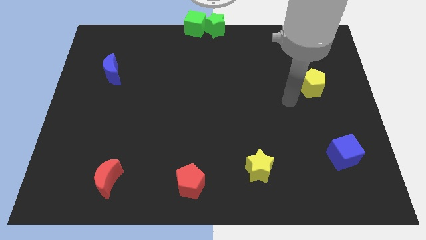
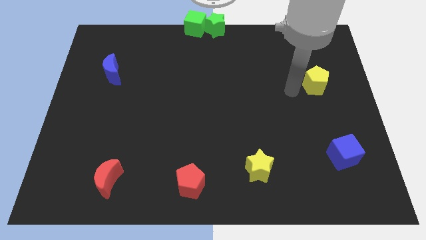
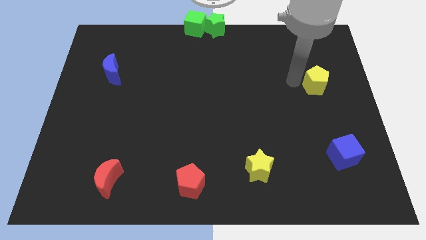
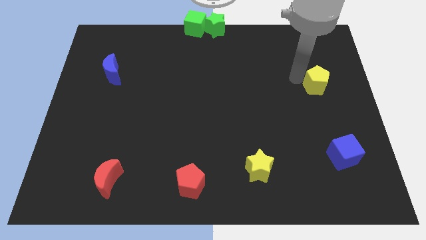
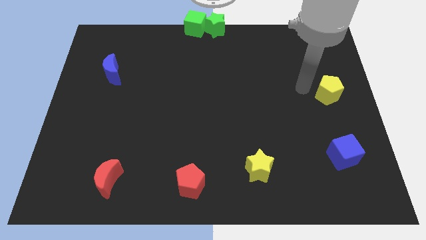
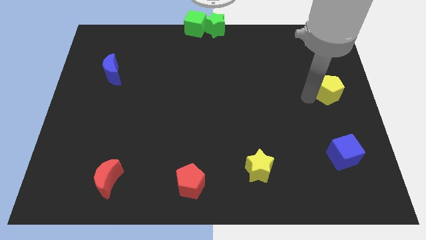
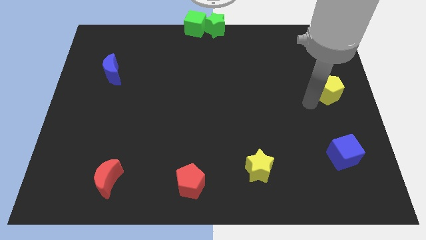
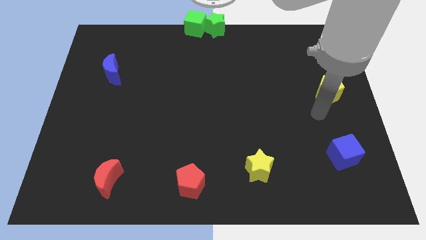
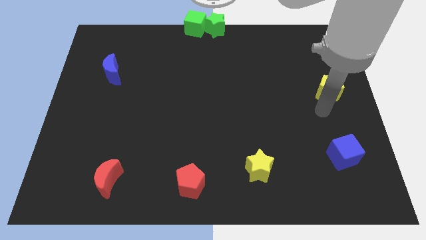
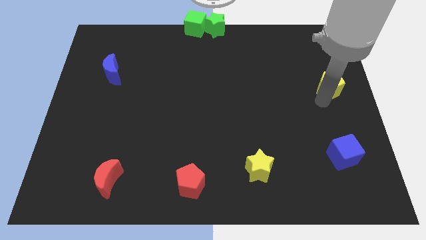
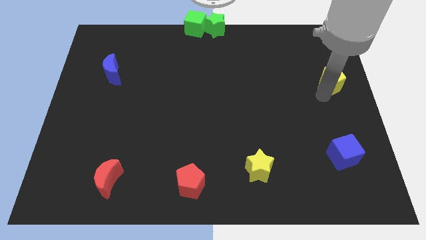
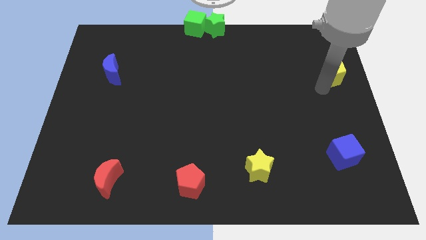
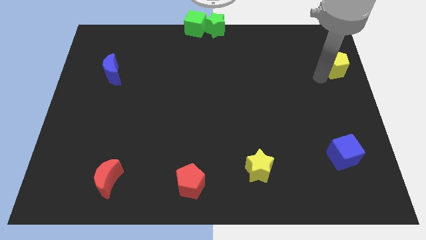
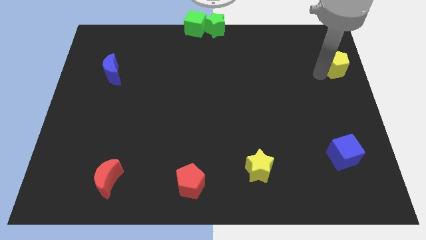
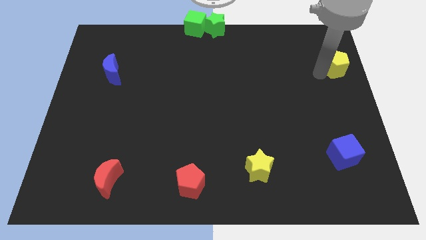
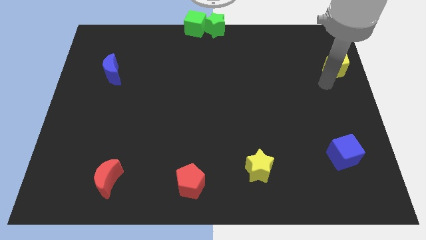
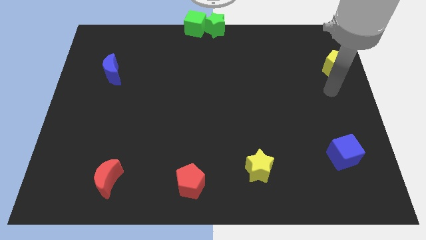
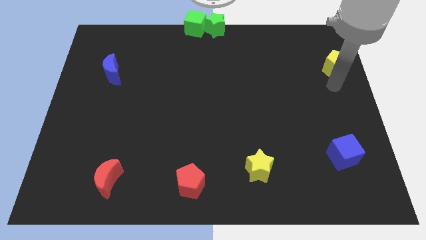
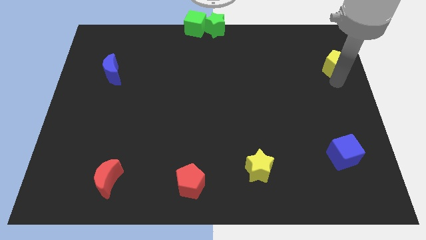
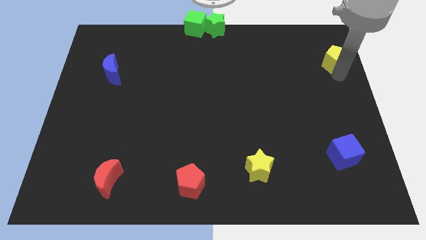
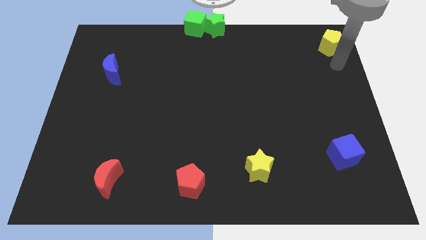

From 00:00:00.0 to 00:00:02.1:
push the yellow pentagon towards the top right side of the board

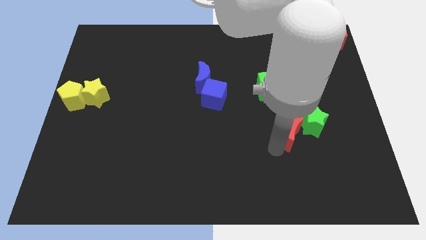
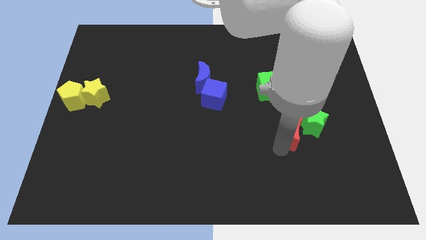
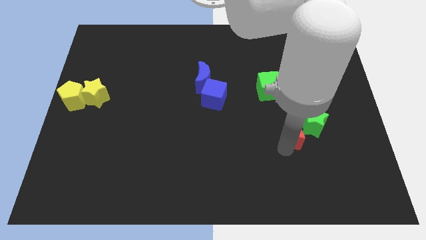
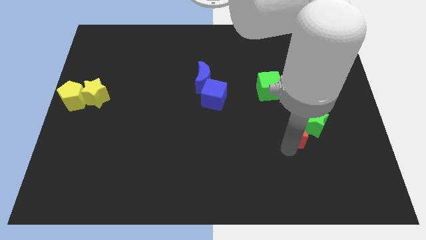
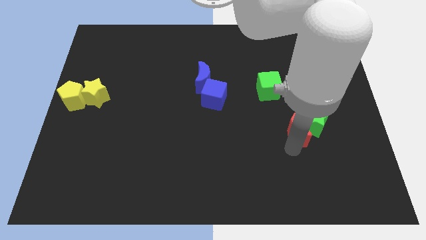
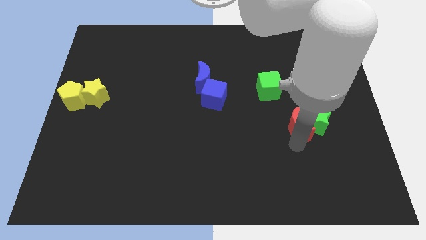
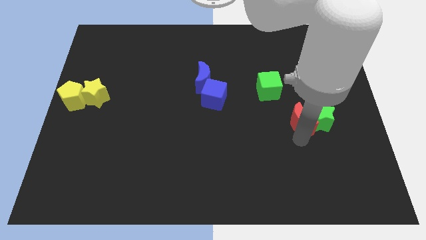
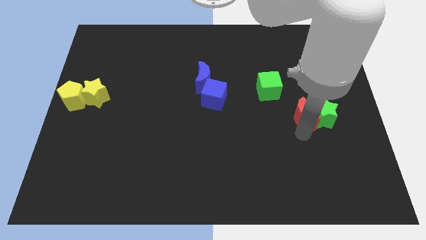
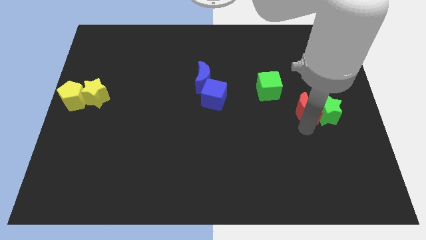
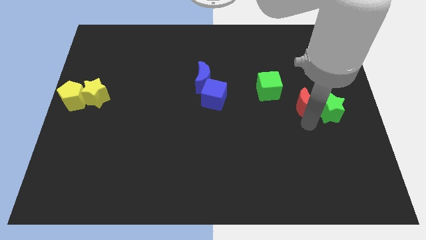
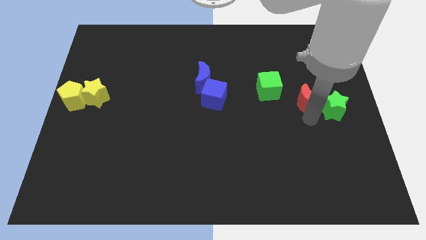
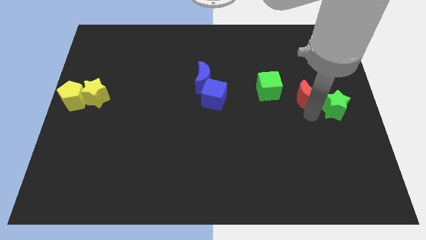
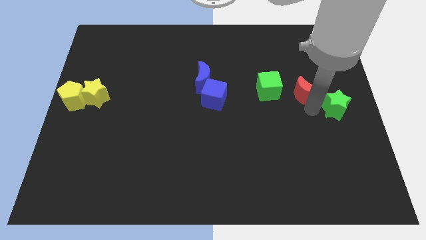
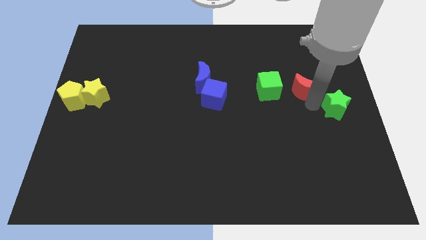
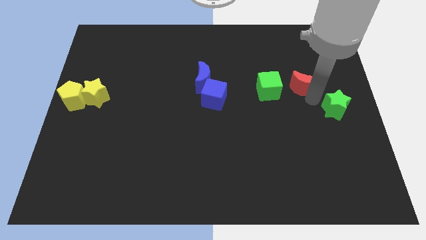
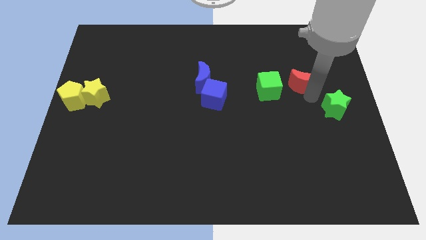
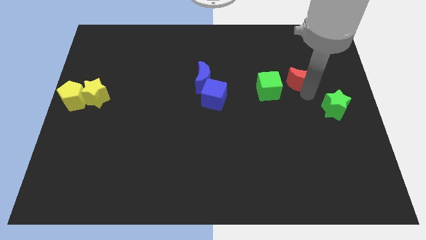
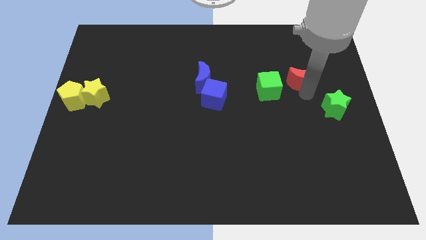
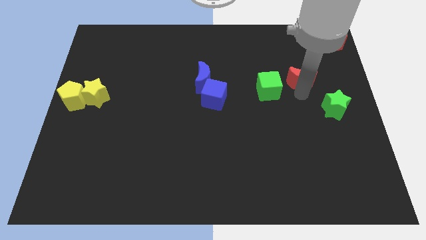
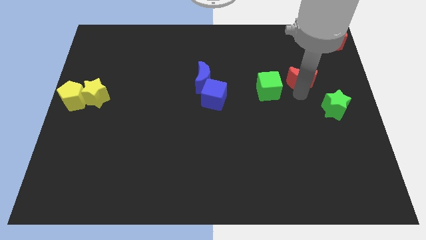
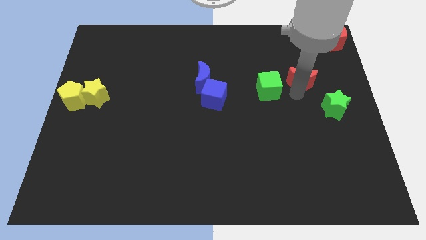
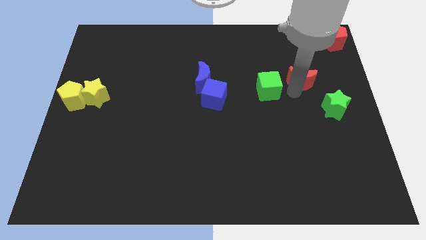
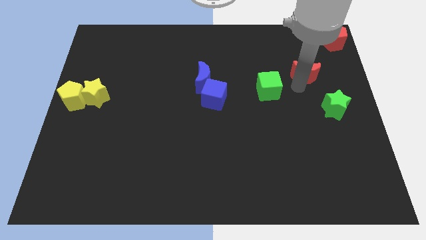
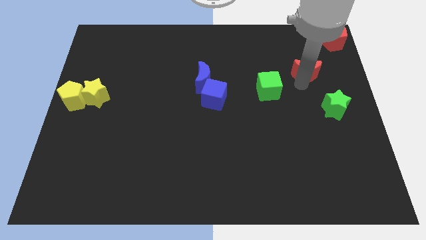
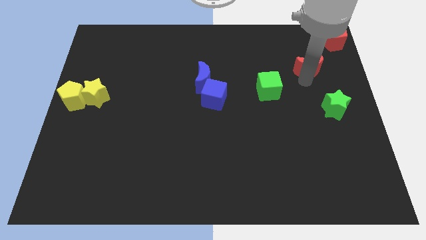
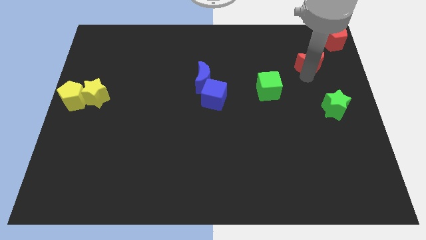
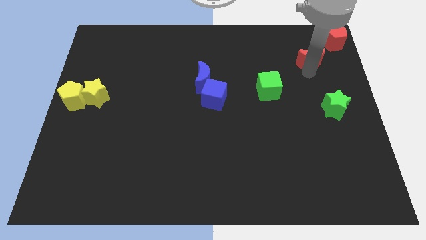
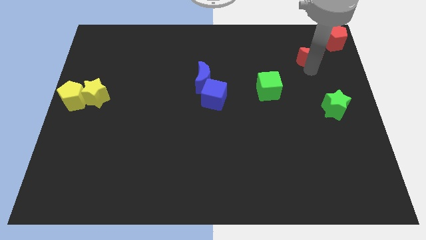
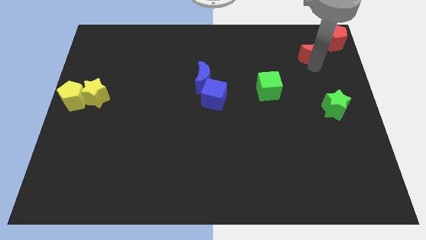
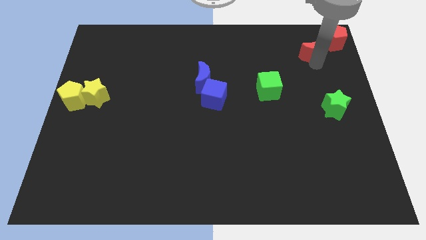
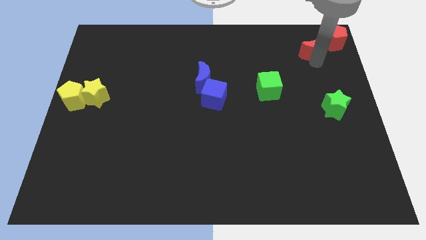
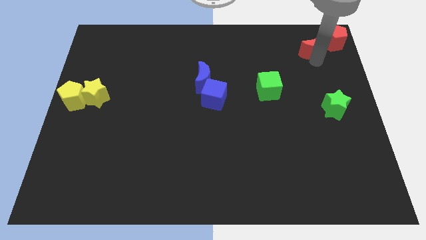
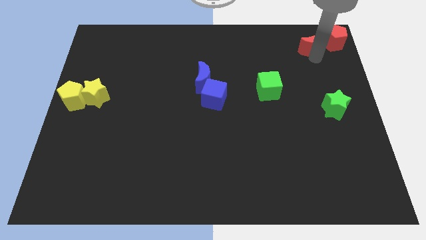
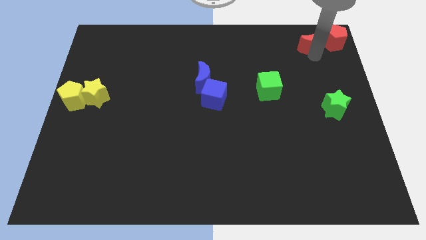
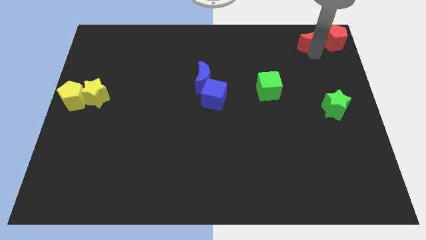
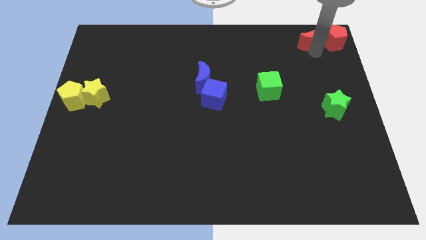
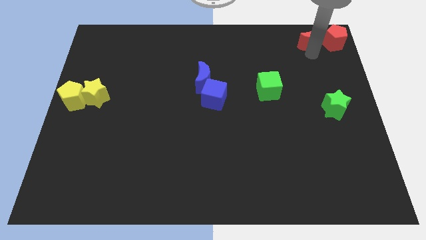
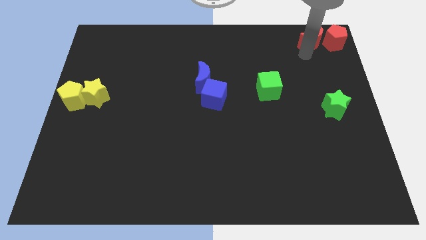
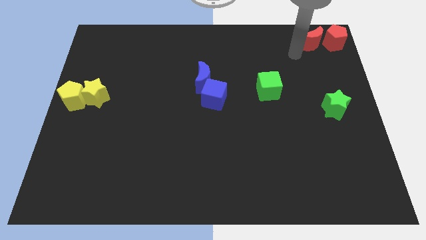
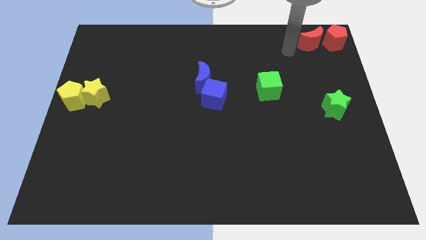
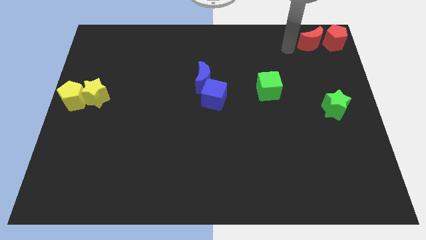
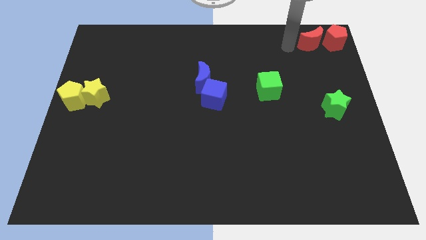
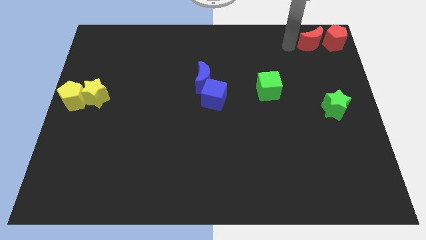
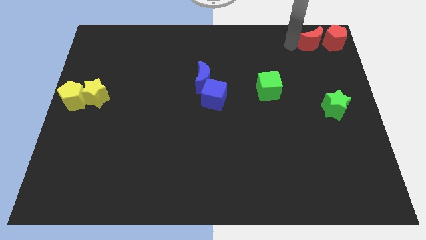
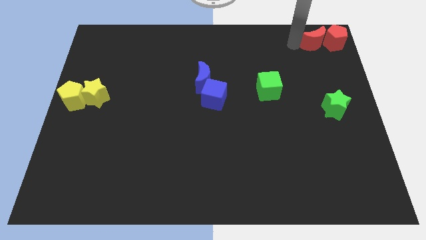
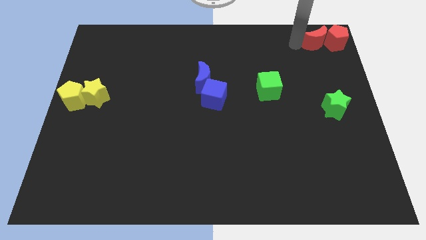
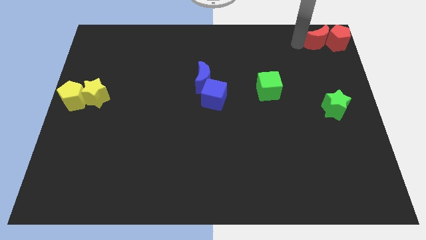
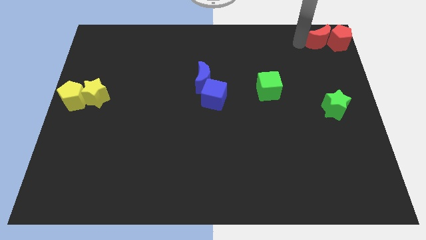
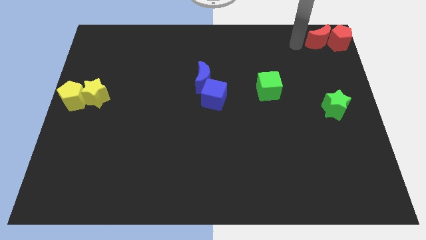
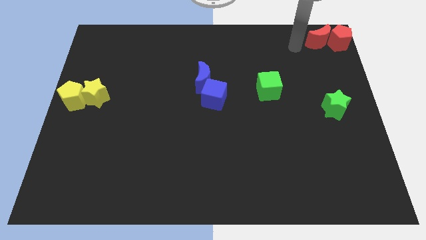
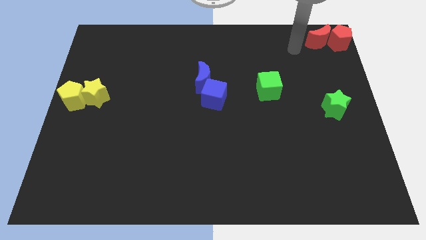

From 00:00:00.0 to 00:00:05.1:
push the red crescent to the top right corner on the board

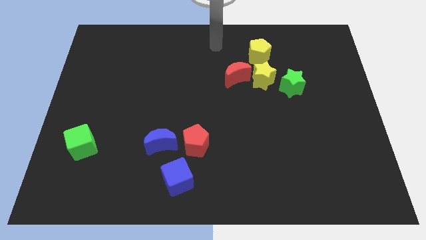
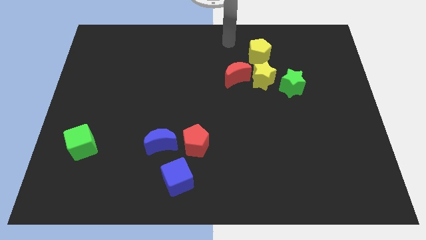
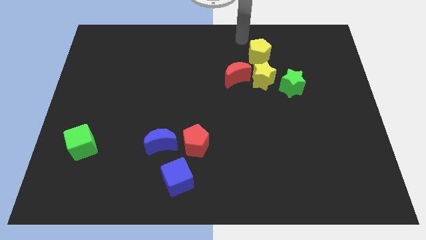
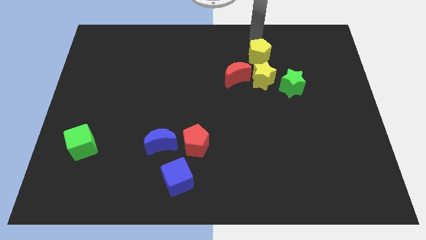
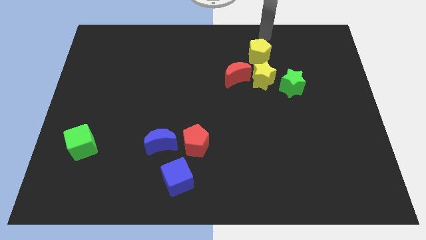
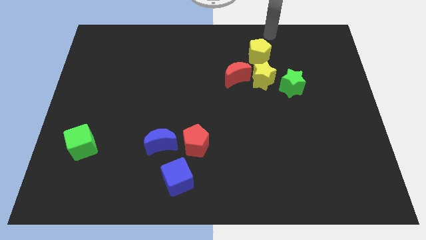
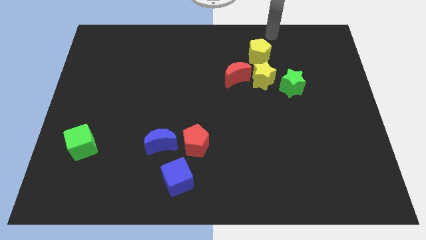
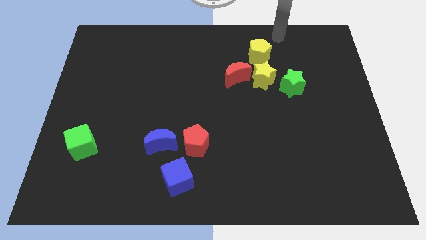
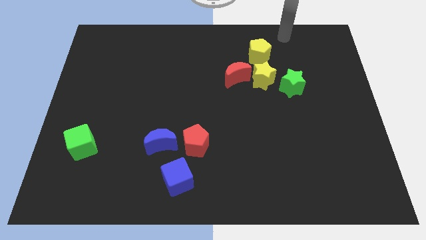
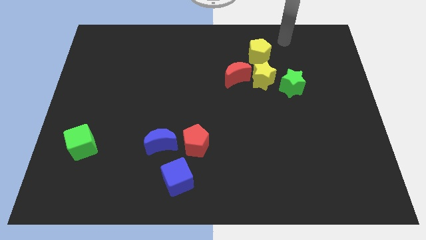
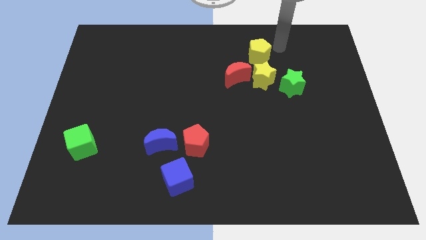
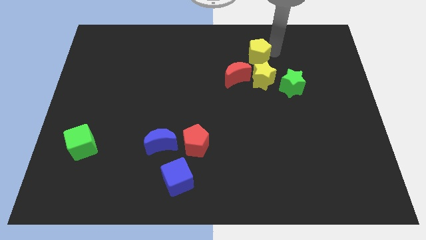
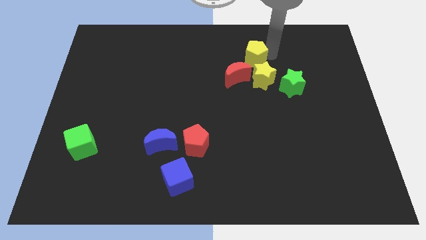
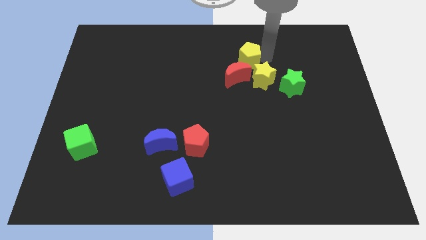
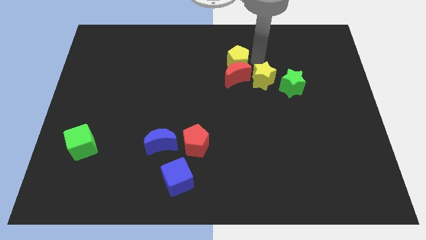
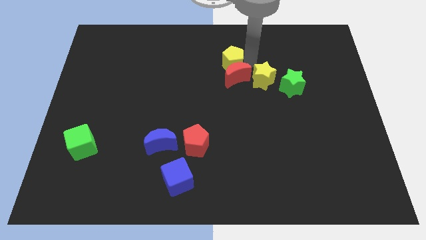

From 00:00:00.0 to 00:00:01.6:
place the yellow pentagon above the red moon

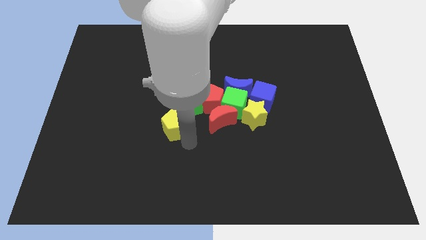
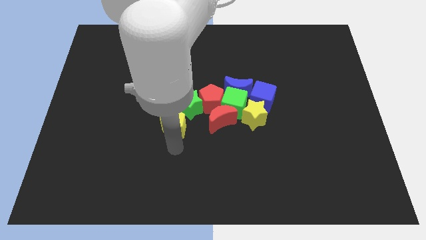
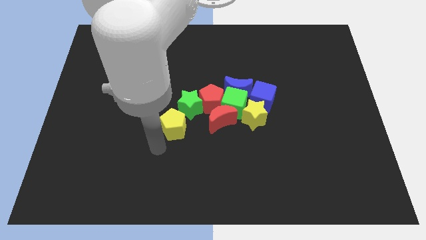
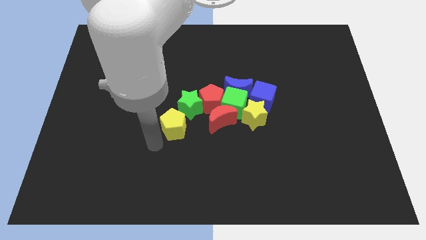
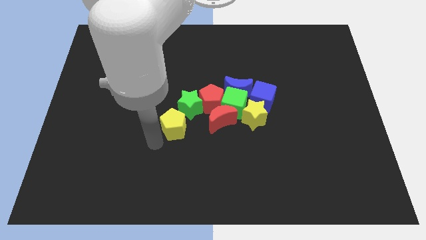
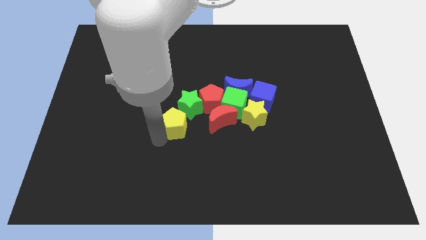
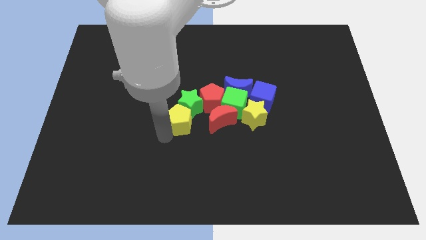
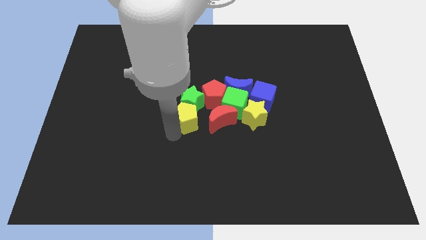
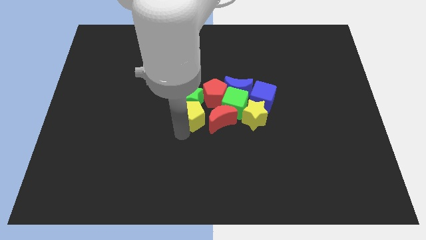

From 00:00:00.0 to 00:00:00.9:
push the yellow pentagon into the green star
